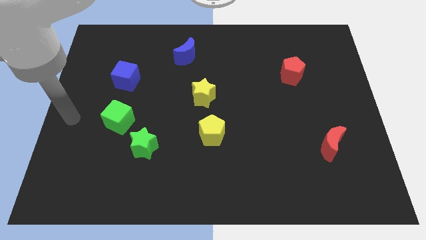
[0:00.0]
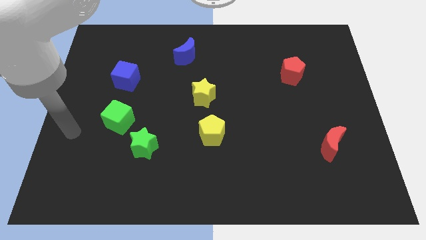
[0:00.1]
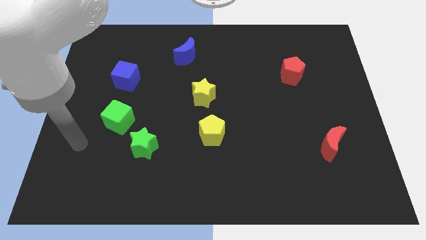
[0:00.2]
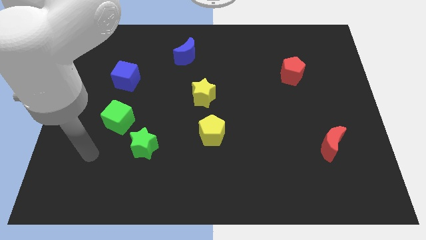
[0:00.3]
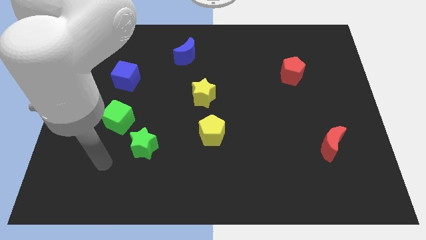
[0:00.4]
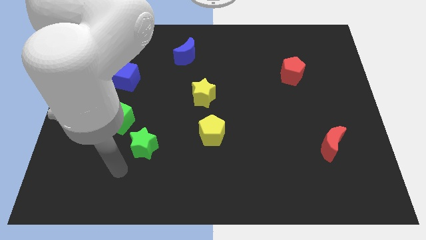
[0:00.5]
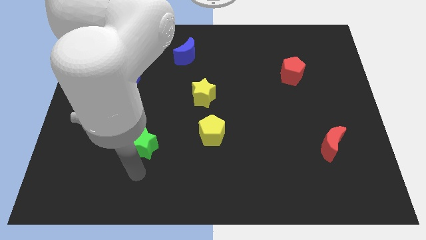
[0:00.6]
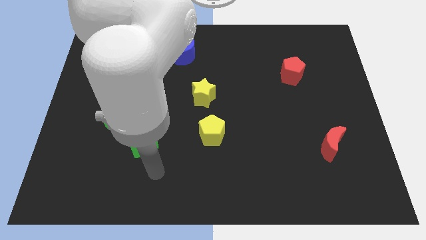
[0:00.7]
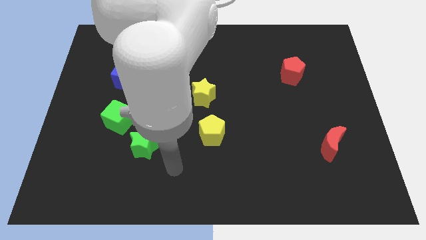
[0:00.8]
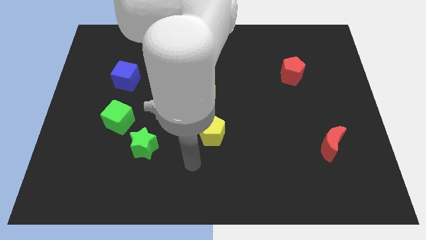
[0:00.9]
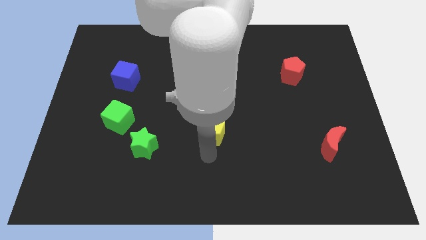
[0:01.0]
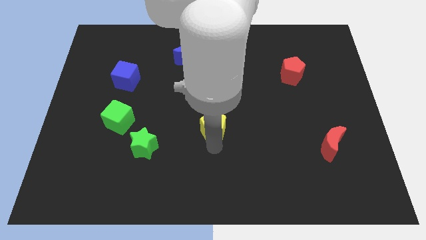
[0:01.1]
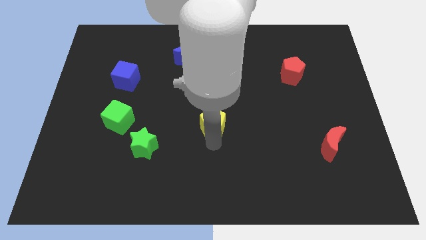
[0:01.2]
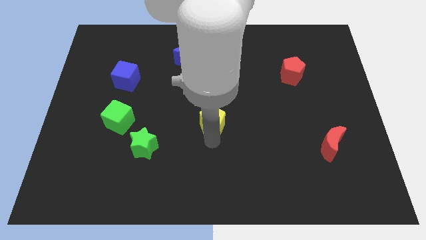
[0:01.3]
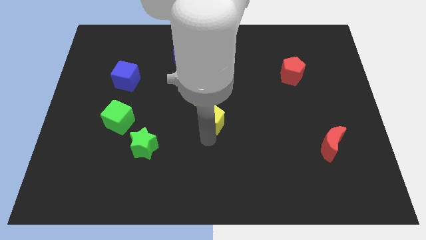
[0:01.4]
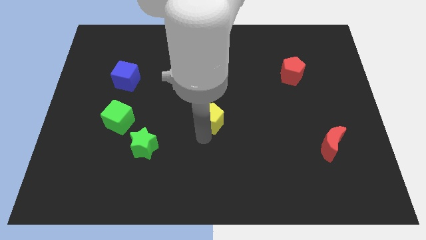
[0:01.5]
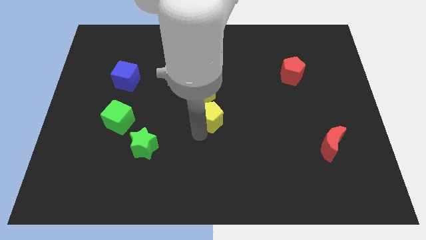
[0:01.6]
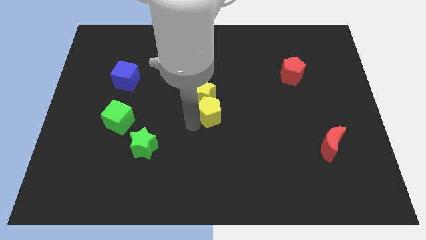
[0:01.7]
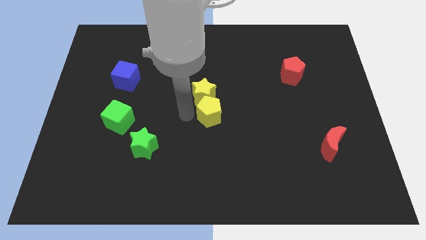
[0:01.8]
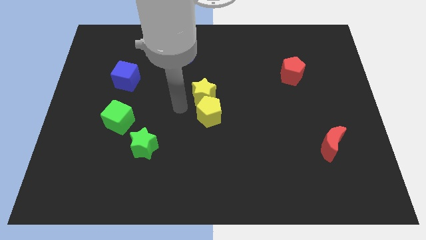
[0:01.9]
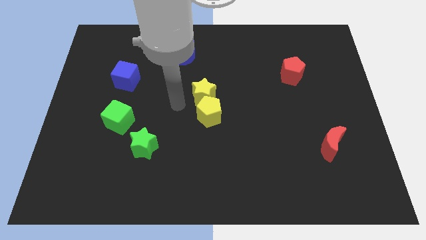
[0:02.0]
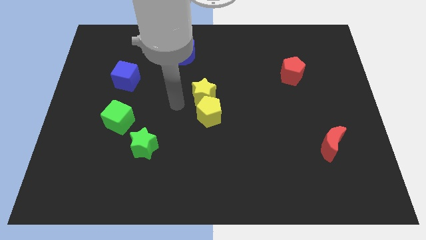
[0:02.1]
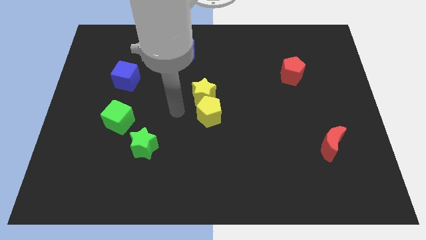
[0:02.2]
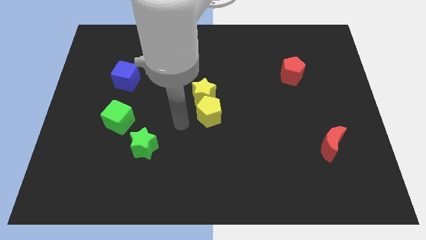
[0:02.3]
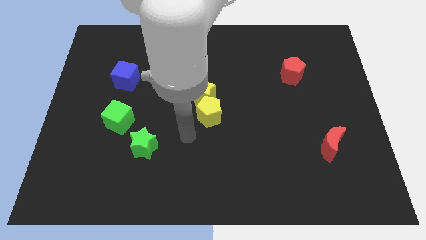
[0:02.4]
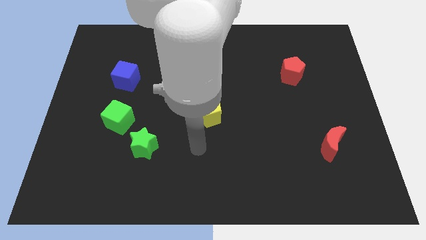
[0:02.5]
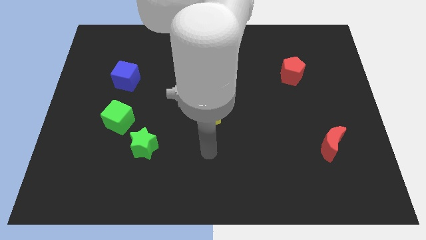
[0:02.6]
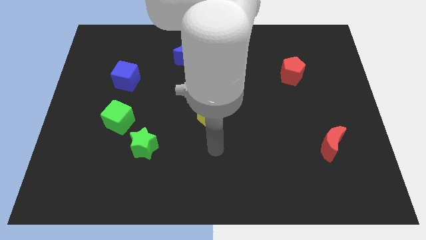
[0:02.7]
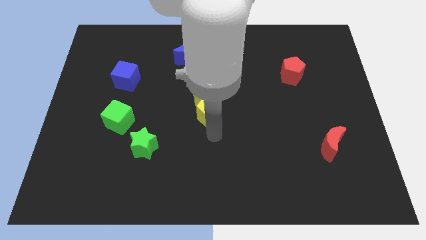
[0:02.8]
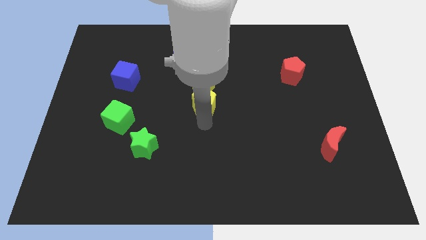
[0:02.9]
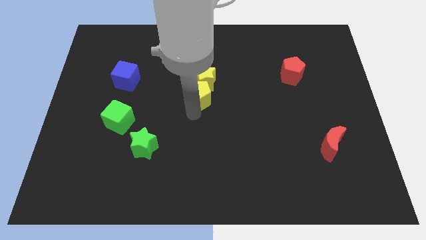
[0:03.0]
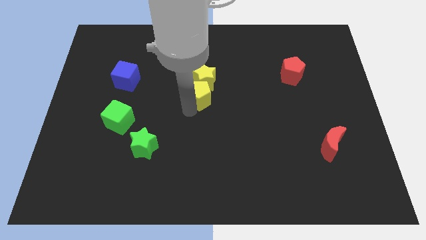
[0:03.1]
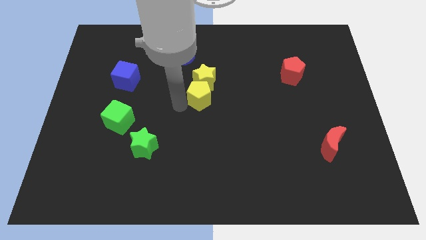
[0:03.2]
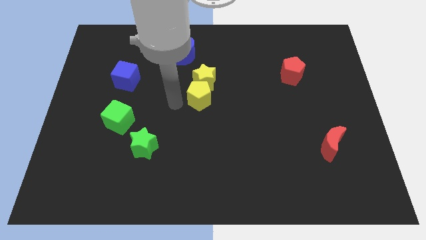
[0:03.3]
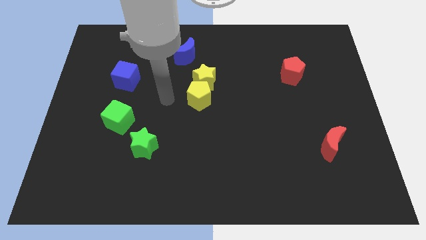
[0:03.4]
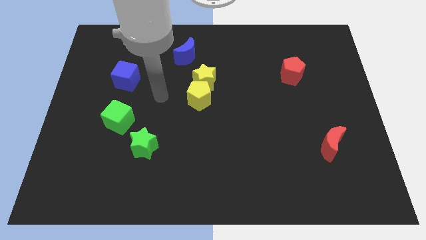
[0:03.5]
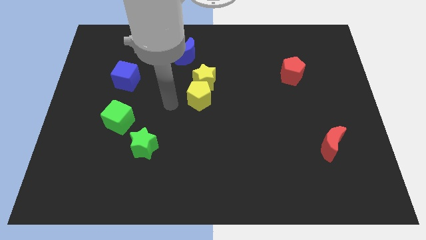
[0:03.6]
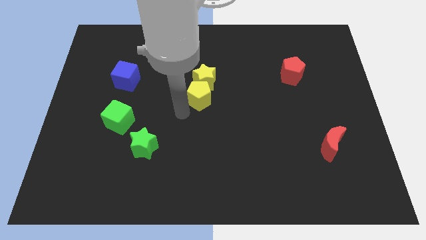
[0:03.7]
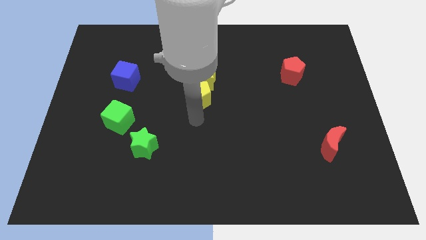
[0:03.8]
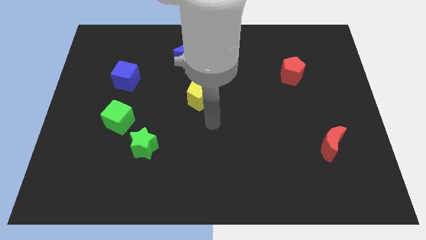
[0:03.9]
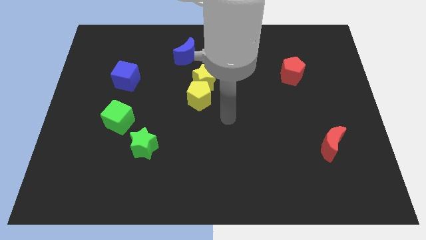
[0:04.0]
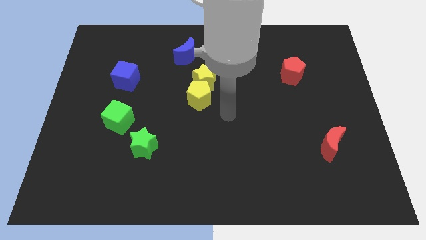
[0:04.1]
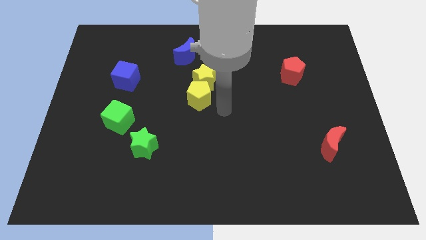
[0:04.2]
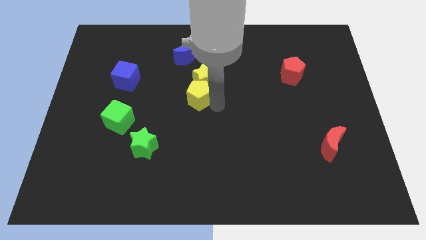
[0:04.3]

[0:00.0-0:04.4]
place the yellow pentagon below the yellow star

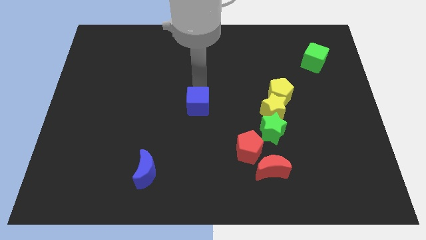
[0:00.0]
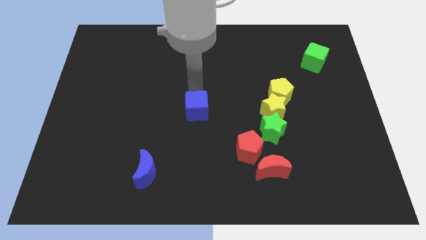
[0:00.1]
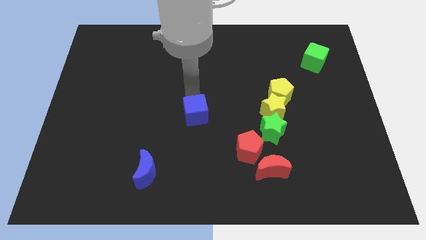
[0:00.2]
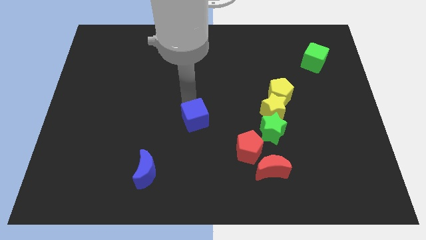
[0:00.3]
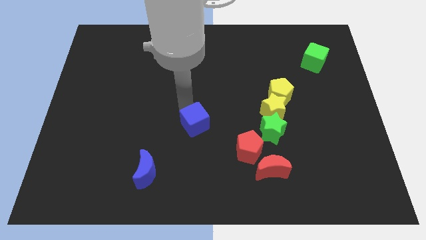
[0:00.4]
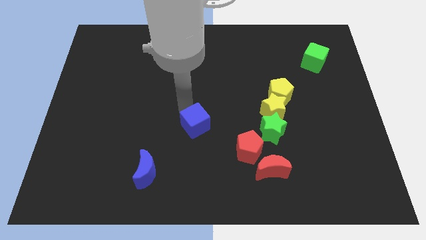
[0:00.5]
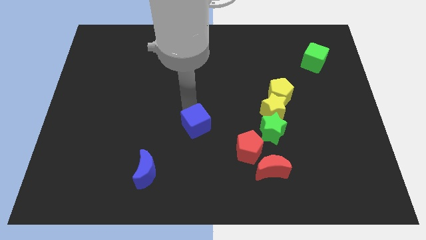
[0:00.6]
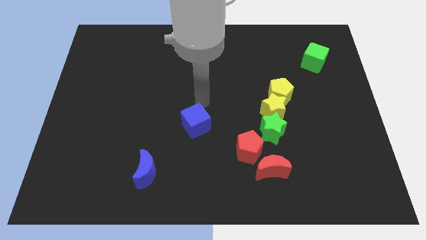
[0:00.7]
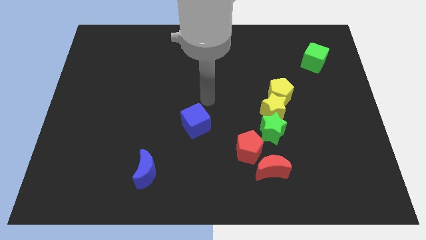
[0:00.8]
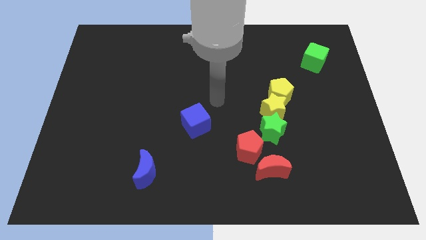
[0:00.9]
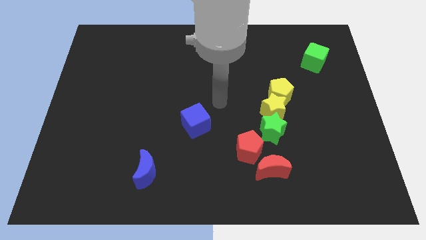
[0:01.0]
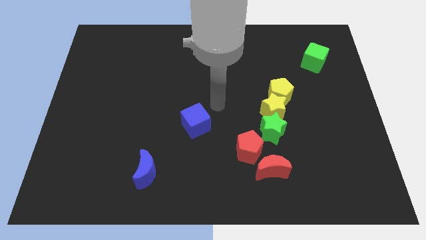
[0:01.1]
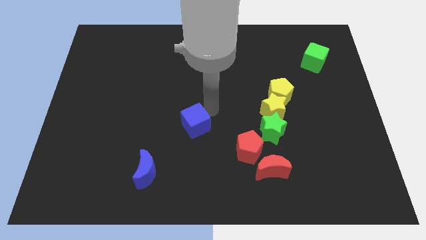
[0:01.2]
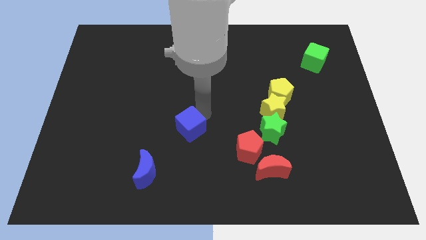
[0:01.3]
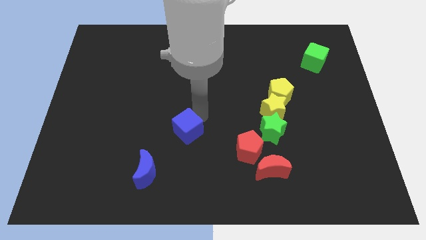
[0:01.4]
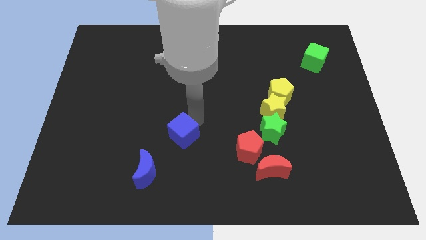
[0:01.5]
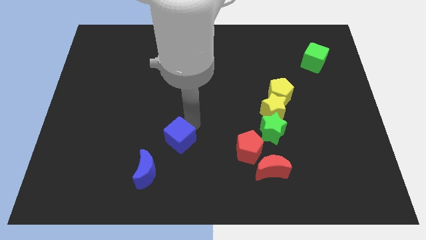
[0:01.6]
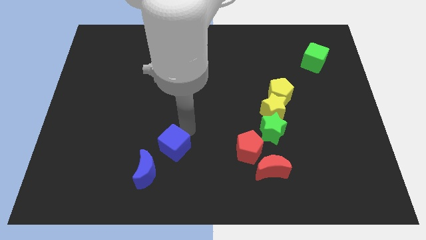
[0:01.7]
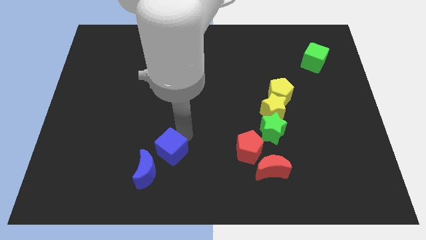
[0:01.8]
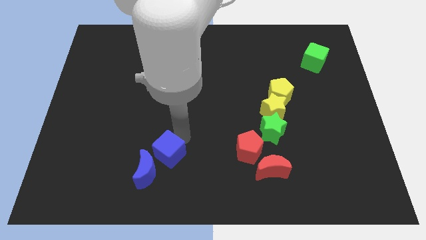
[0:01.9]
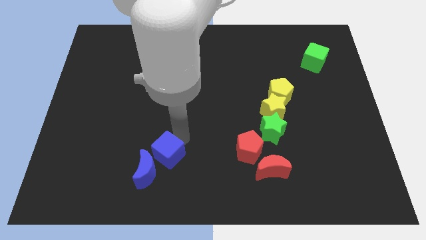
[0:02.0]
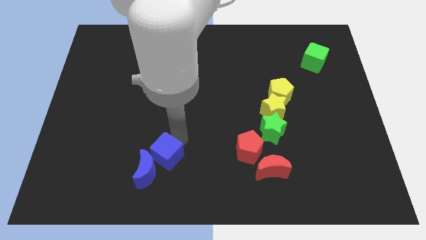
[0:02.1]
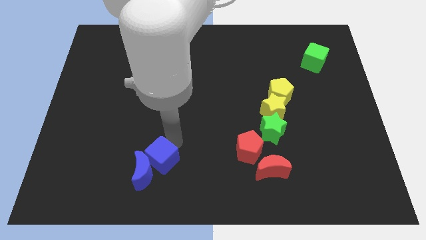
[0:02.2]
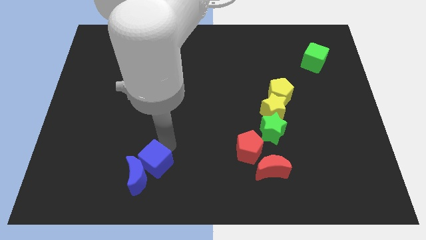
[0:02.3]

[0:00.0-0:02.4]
push the blue cube to the top right of the blue crescent

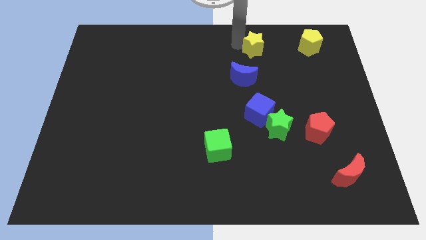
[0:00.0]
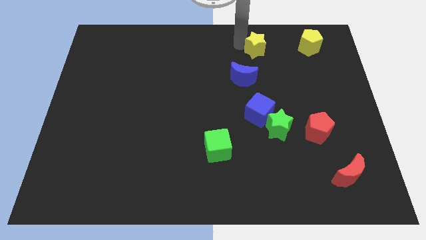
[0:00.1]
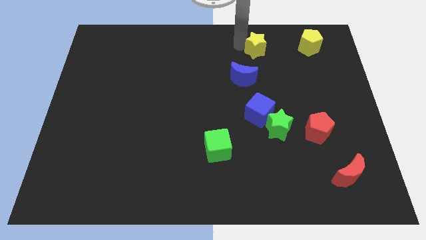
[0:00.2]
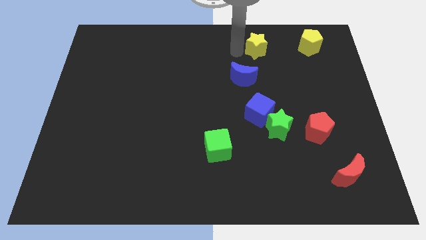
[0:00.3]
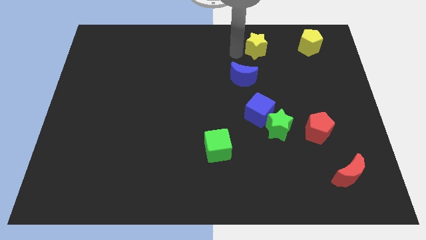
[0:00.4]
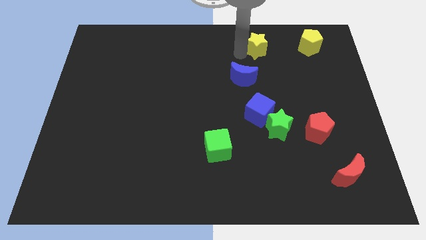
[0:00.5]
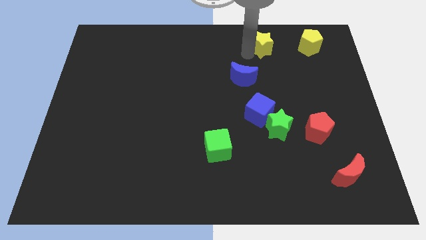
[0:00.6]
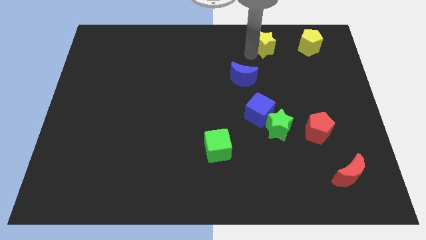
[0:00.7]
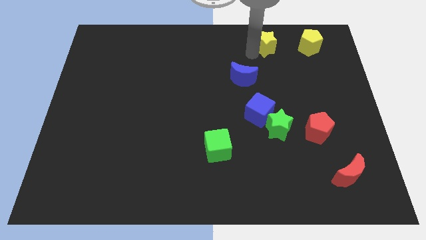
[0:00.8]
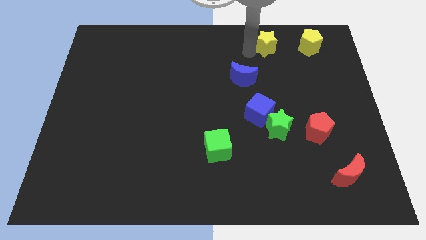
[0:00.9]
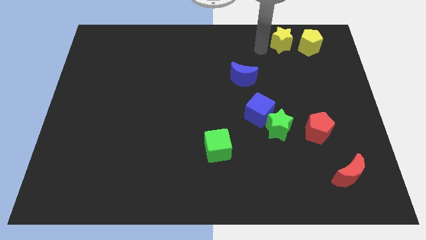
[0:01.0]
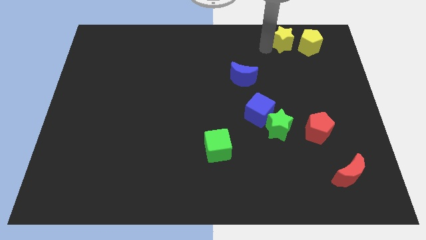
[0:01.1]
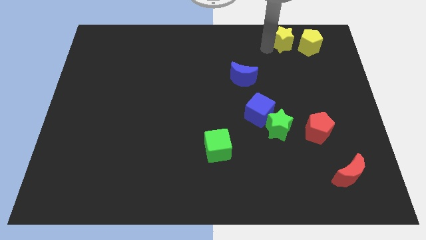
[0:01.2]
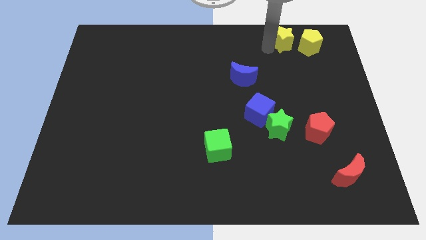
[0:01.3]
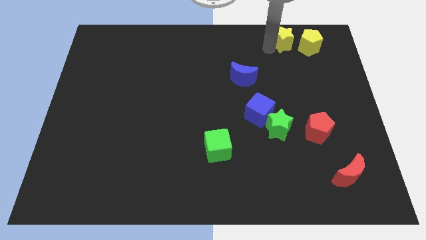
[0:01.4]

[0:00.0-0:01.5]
push the yellow star left to the yellow pentagon

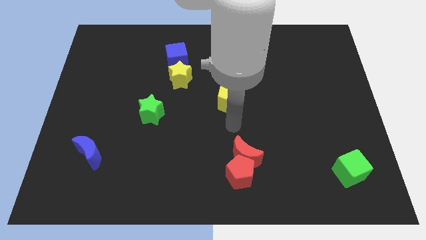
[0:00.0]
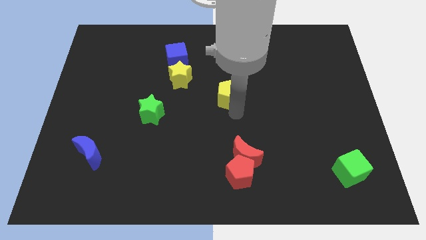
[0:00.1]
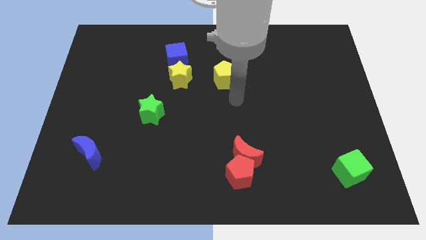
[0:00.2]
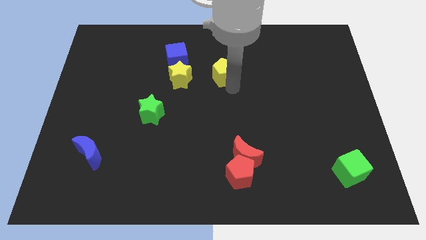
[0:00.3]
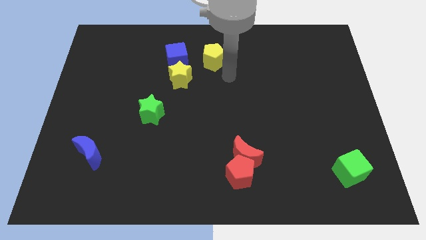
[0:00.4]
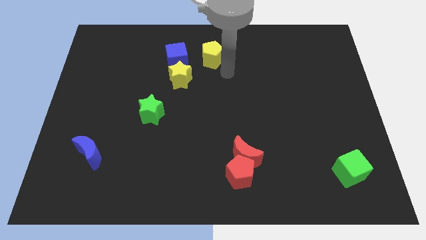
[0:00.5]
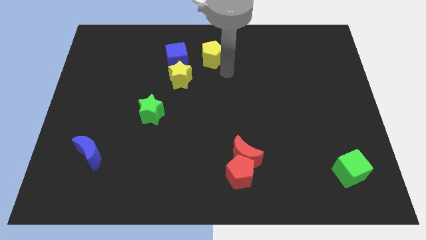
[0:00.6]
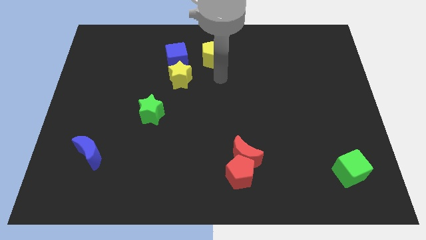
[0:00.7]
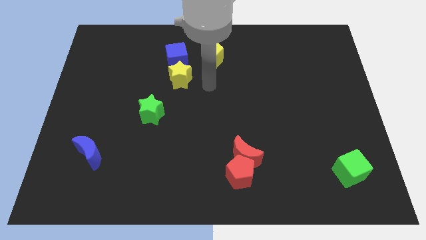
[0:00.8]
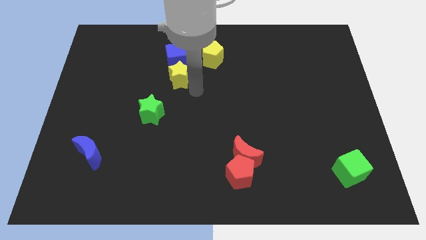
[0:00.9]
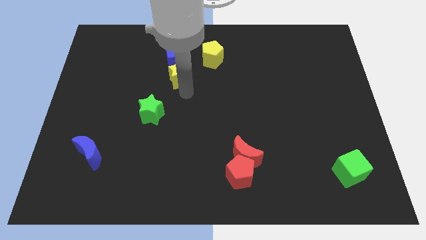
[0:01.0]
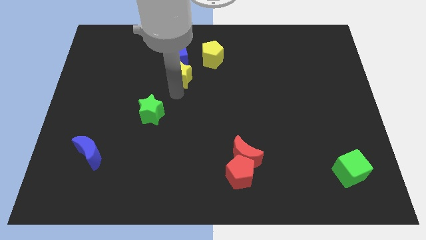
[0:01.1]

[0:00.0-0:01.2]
place the yellow pentagon to the top center of the board
